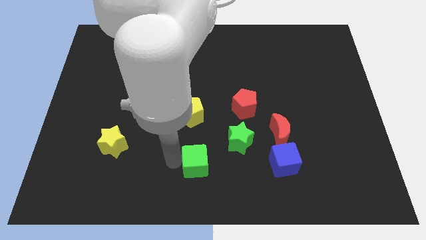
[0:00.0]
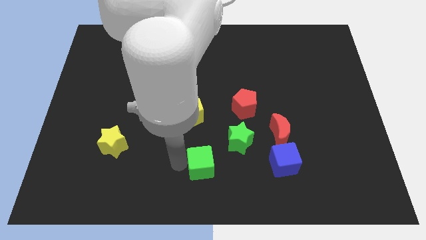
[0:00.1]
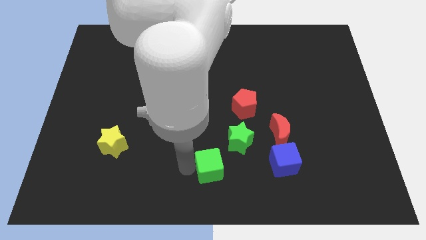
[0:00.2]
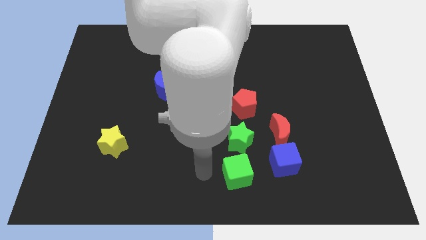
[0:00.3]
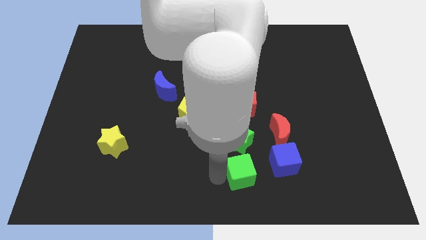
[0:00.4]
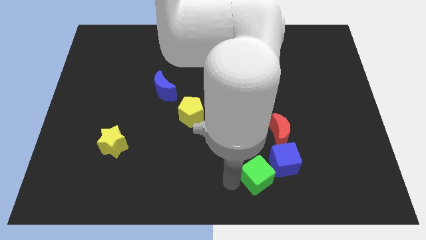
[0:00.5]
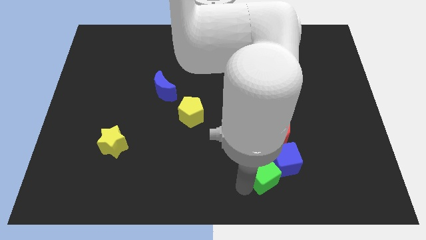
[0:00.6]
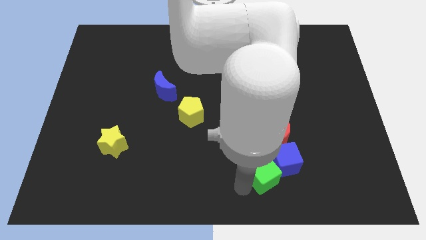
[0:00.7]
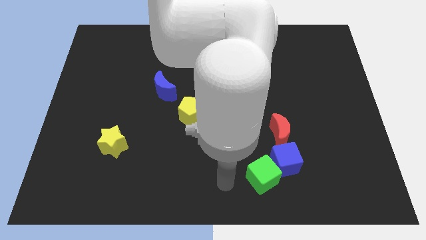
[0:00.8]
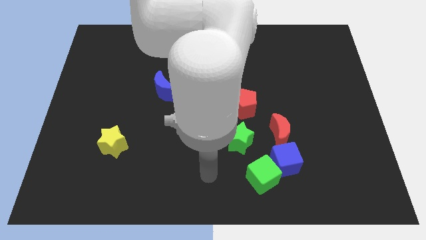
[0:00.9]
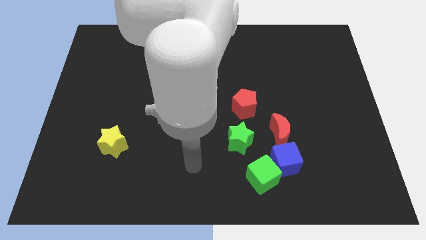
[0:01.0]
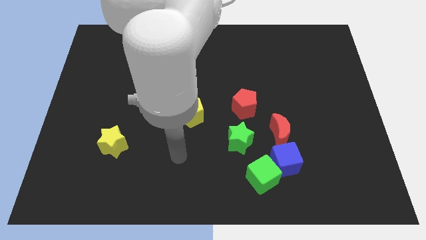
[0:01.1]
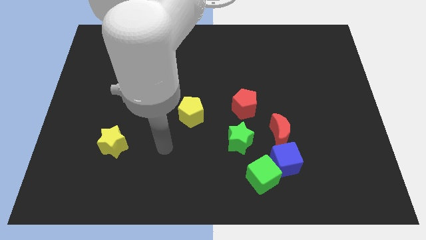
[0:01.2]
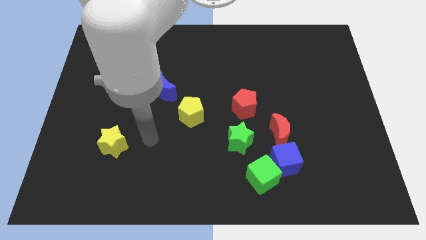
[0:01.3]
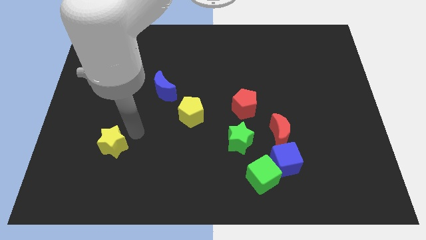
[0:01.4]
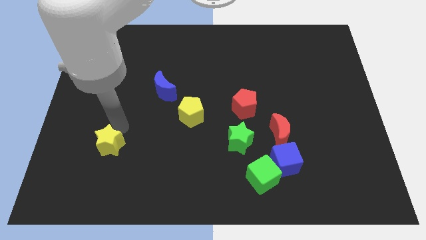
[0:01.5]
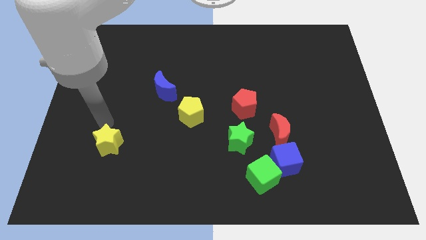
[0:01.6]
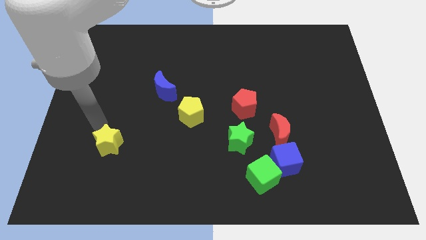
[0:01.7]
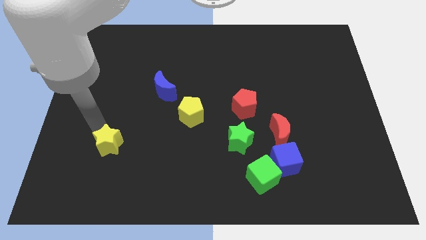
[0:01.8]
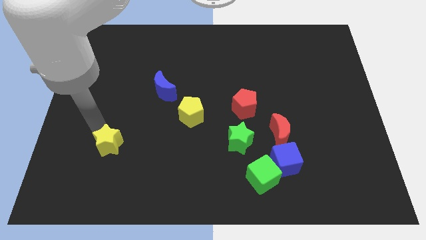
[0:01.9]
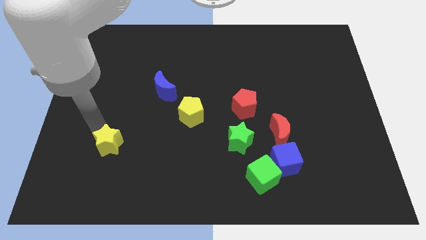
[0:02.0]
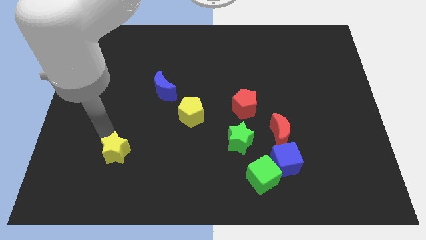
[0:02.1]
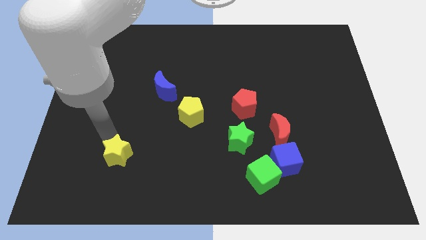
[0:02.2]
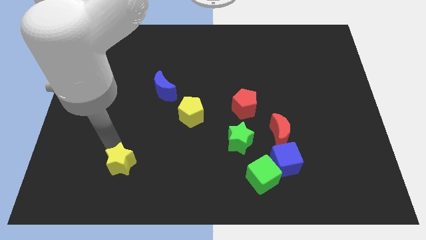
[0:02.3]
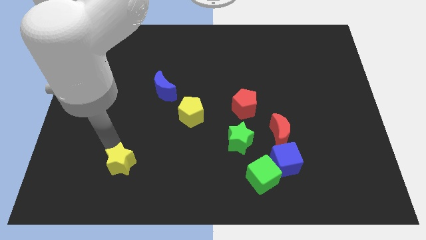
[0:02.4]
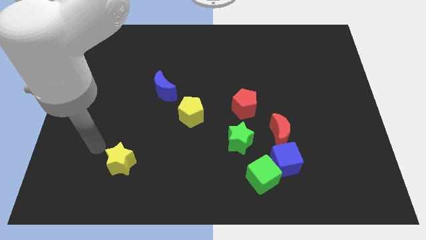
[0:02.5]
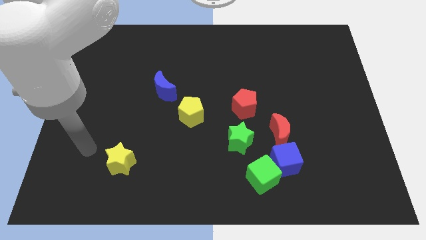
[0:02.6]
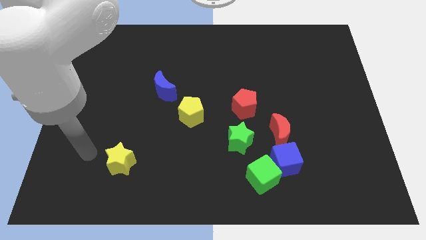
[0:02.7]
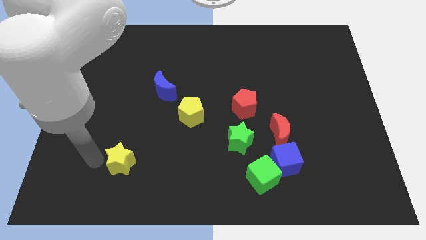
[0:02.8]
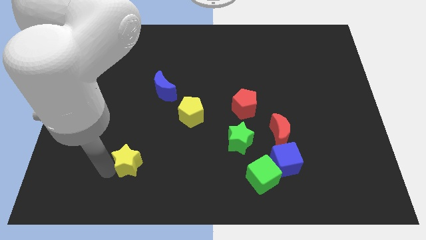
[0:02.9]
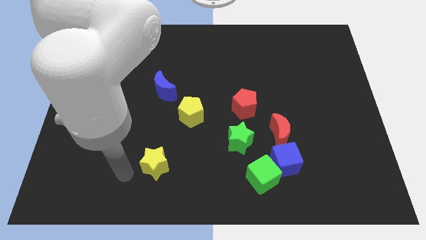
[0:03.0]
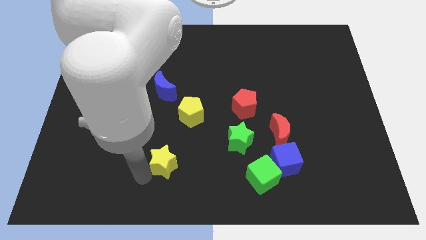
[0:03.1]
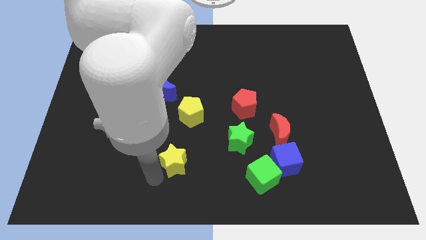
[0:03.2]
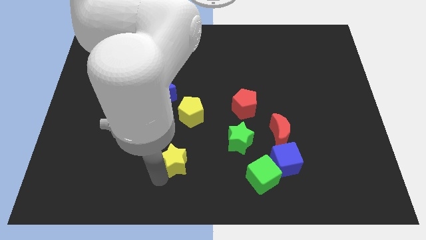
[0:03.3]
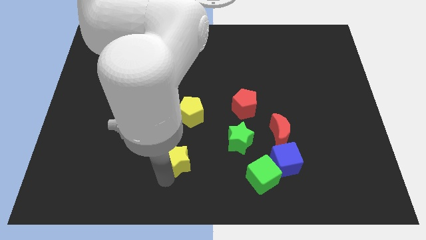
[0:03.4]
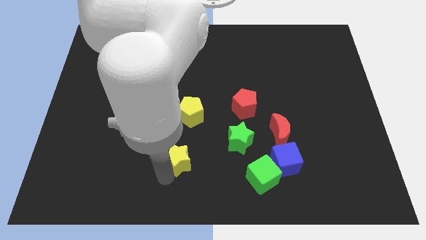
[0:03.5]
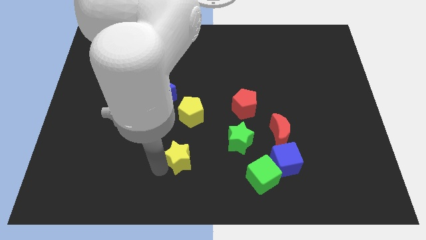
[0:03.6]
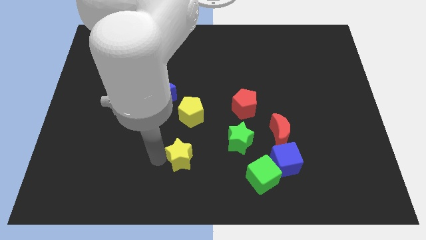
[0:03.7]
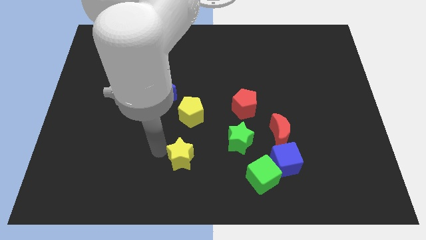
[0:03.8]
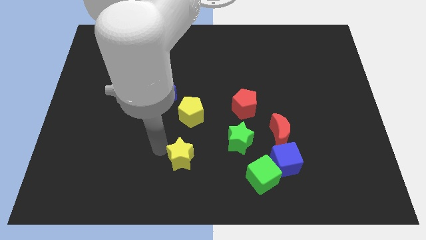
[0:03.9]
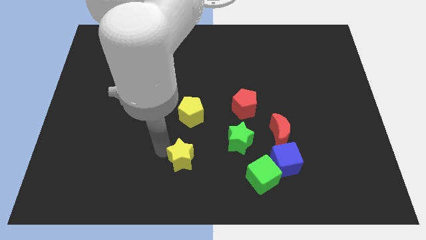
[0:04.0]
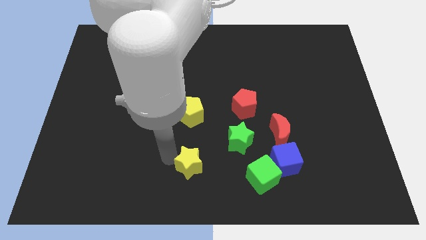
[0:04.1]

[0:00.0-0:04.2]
place the yellow star down to the yellow pentagon

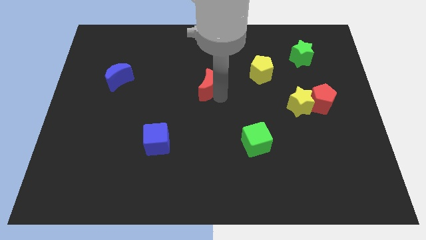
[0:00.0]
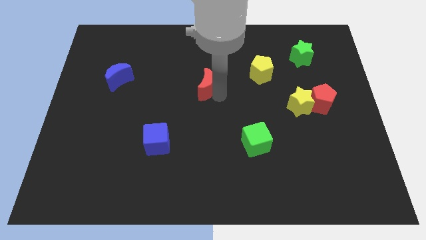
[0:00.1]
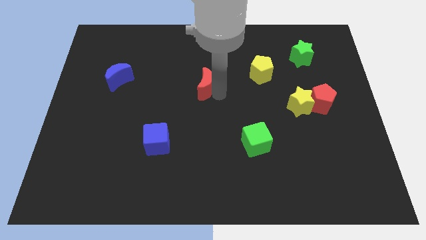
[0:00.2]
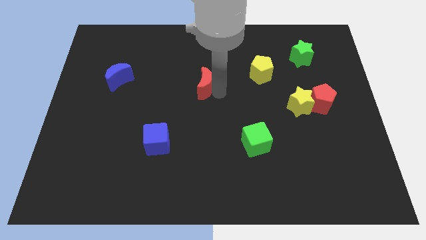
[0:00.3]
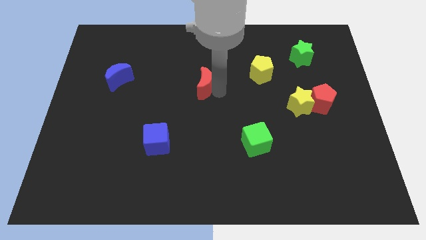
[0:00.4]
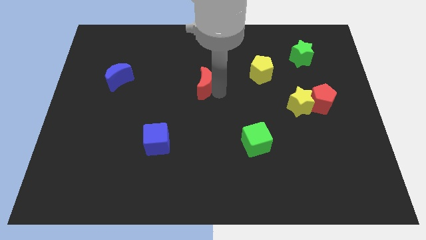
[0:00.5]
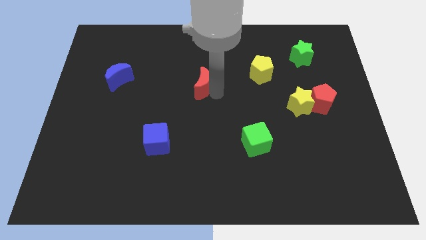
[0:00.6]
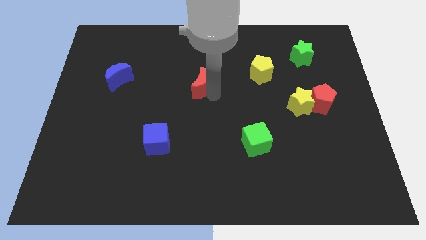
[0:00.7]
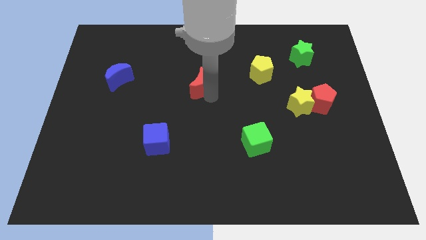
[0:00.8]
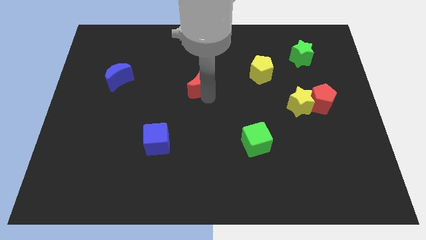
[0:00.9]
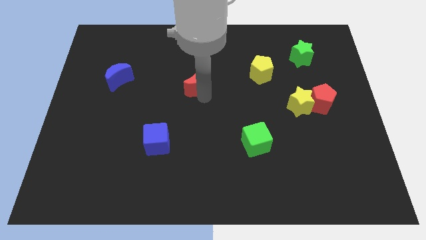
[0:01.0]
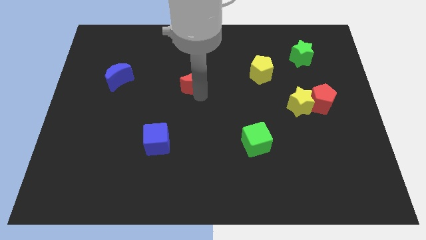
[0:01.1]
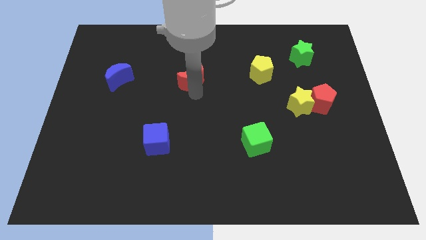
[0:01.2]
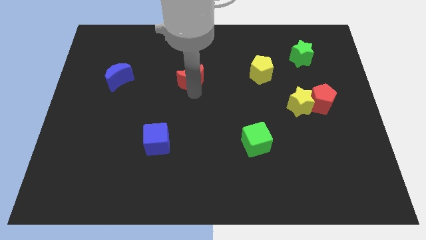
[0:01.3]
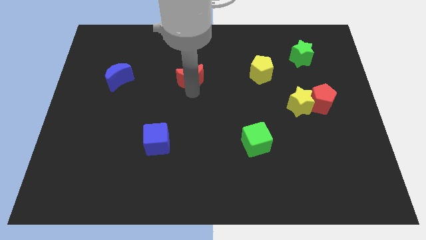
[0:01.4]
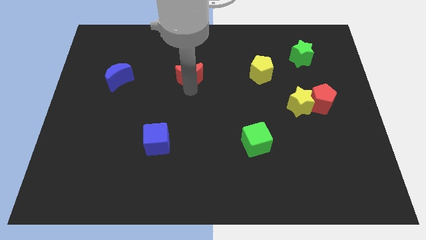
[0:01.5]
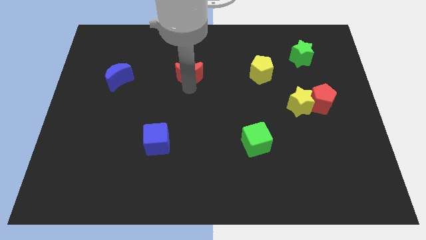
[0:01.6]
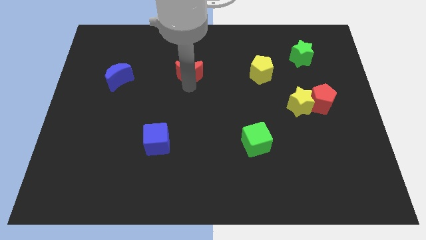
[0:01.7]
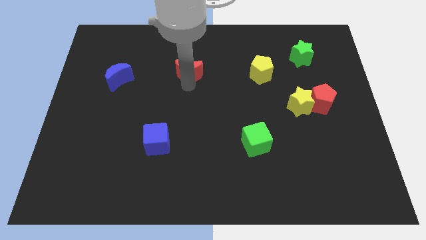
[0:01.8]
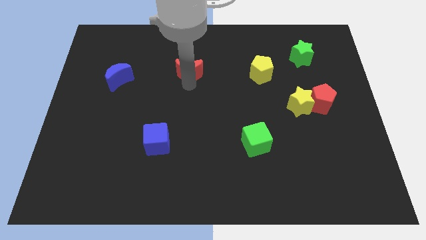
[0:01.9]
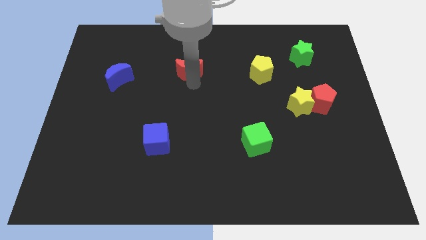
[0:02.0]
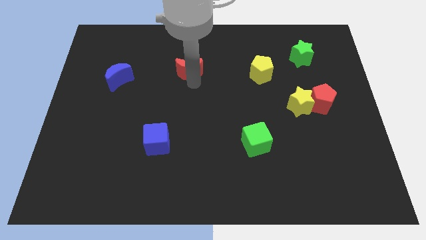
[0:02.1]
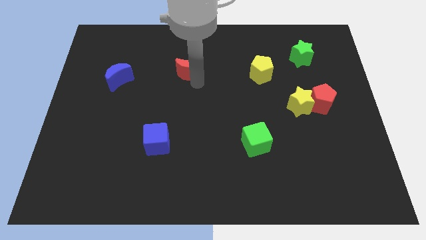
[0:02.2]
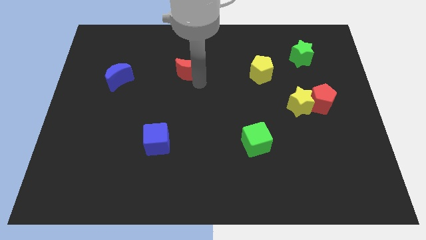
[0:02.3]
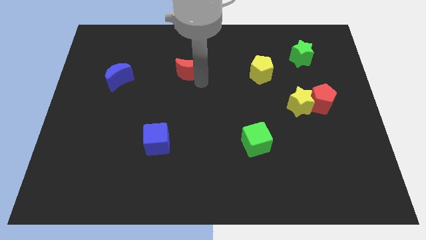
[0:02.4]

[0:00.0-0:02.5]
put the red crescent to the right of the blue crescent

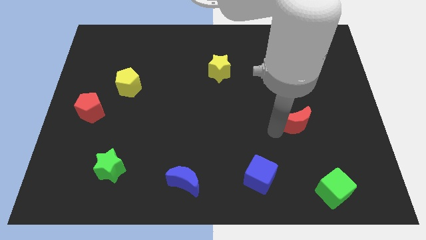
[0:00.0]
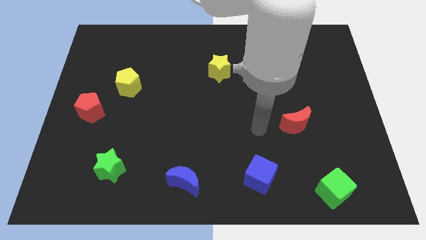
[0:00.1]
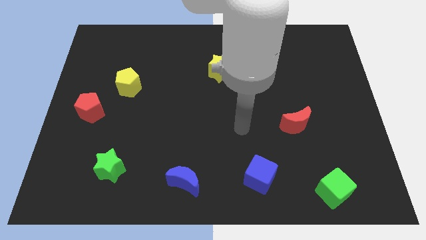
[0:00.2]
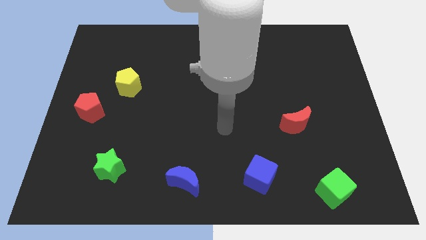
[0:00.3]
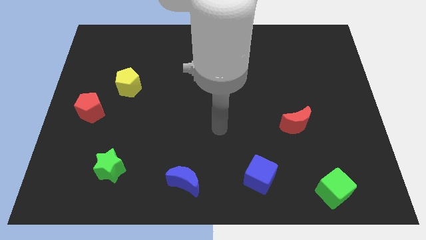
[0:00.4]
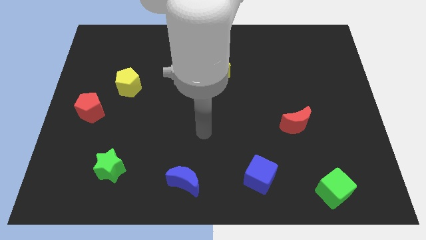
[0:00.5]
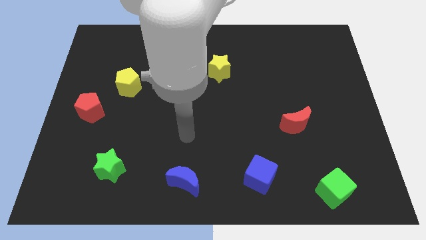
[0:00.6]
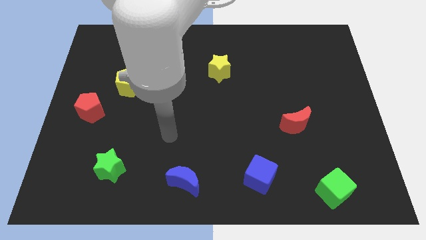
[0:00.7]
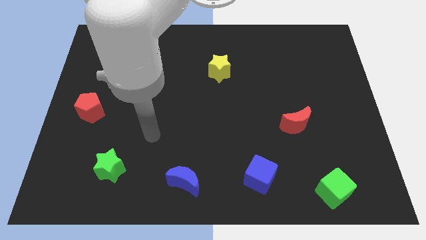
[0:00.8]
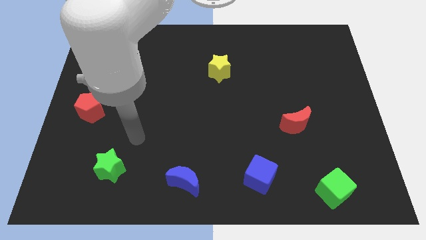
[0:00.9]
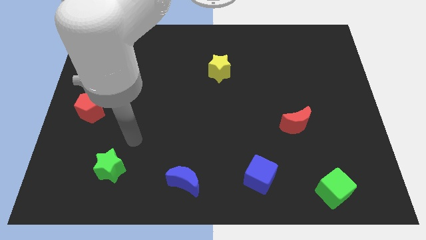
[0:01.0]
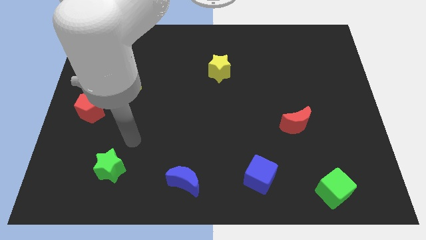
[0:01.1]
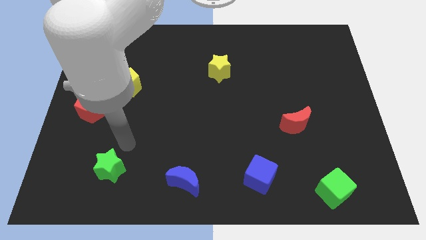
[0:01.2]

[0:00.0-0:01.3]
place your hand close to green star

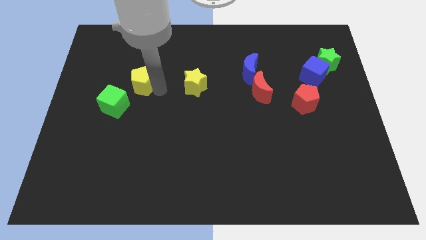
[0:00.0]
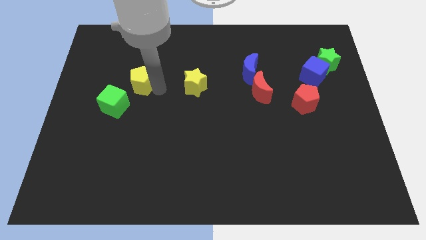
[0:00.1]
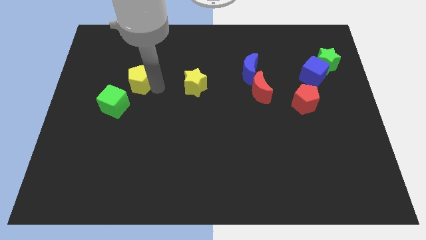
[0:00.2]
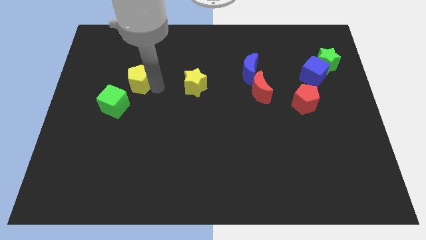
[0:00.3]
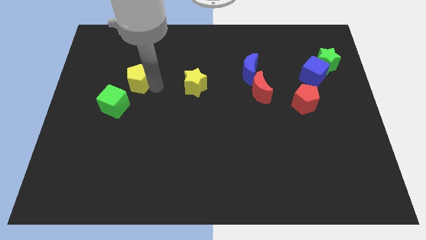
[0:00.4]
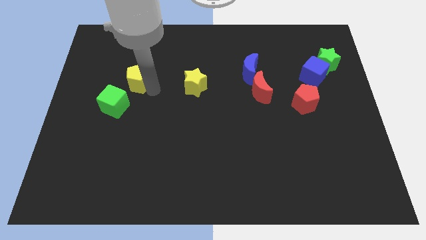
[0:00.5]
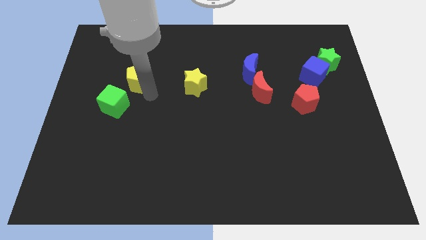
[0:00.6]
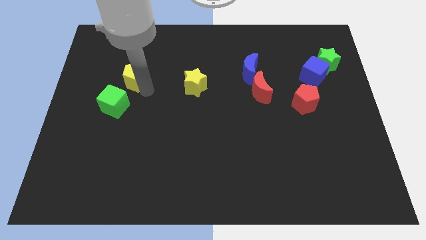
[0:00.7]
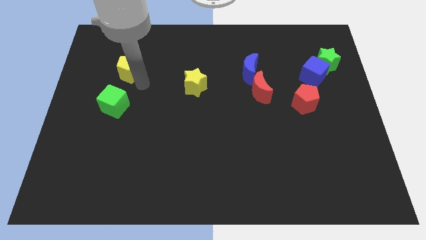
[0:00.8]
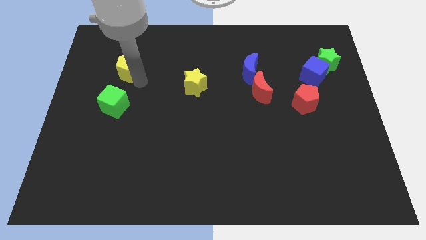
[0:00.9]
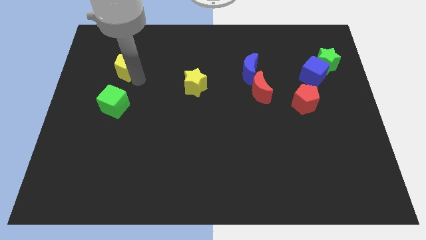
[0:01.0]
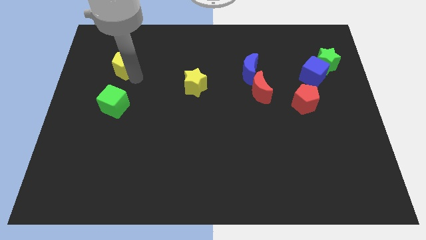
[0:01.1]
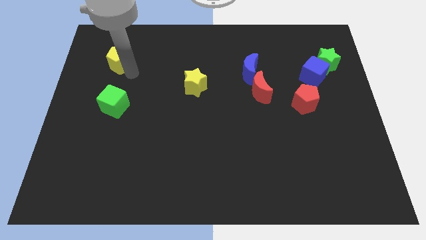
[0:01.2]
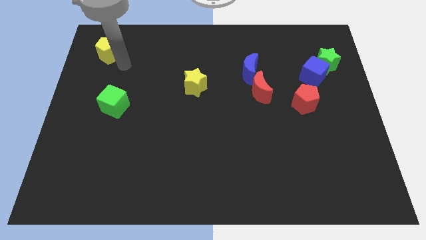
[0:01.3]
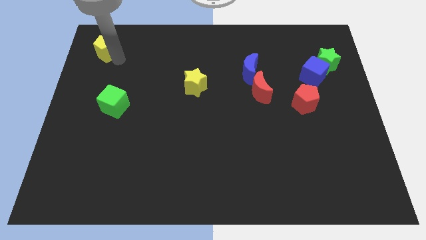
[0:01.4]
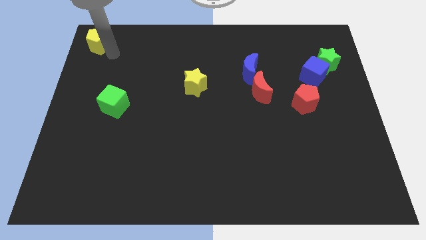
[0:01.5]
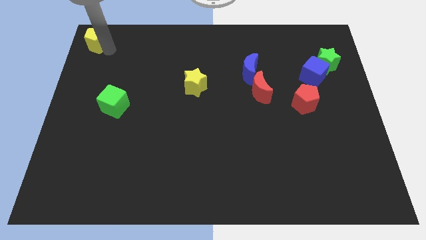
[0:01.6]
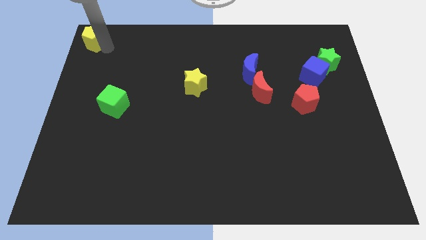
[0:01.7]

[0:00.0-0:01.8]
place the yellow pentagon above the green cube
